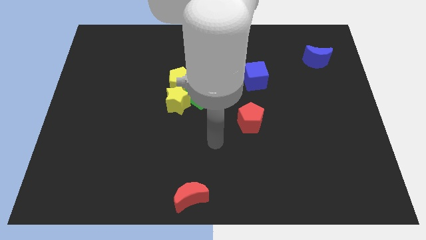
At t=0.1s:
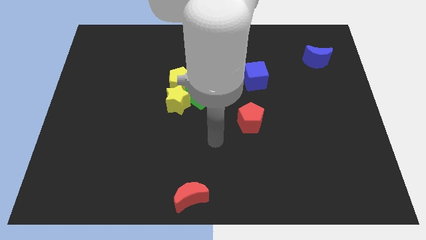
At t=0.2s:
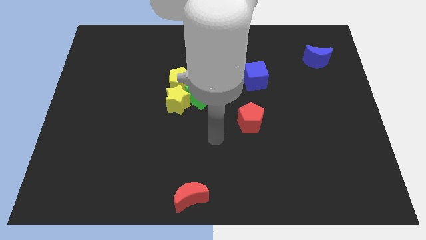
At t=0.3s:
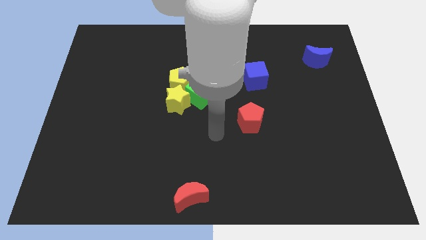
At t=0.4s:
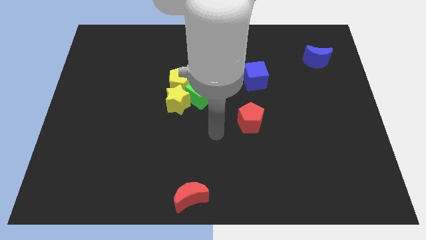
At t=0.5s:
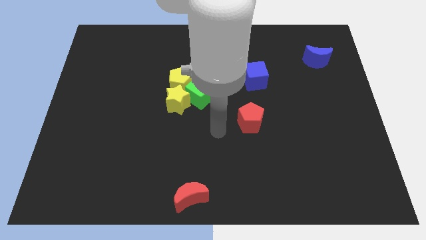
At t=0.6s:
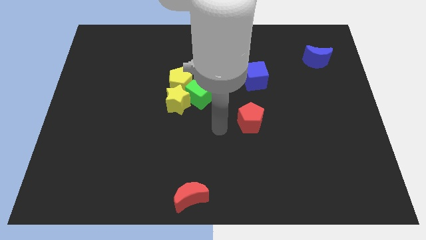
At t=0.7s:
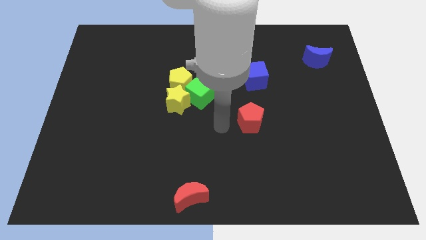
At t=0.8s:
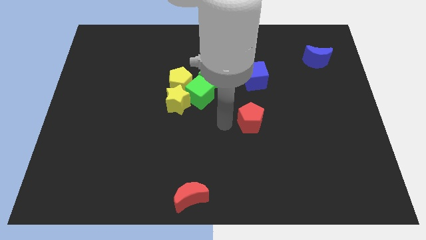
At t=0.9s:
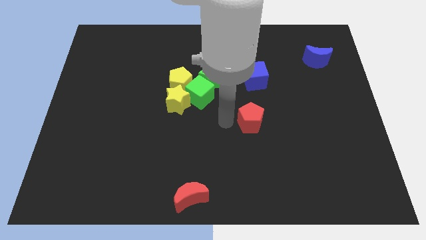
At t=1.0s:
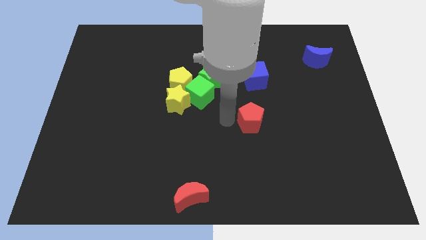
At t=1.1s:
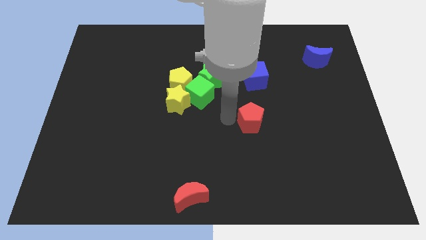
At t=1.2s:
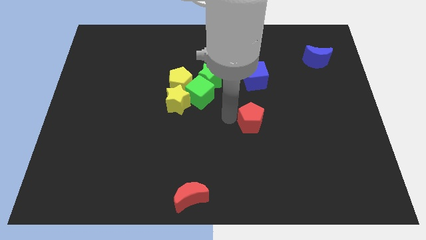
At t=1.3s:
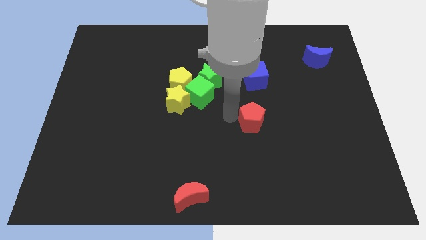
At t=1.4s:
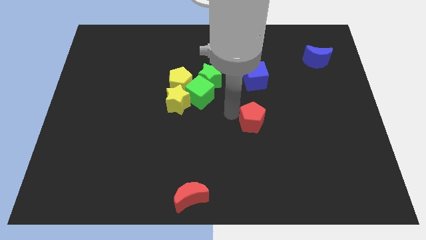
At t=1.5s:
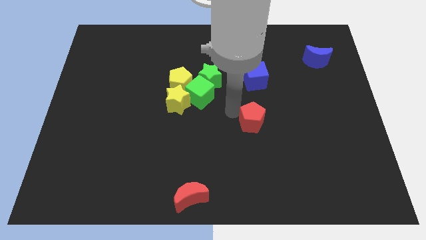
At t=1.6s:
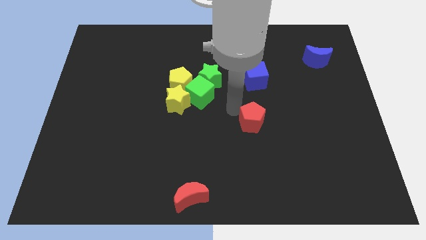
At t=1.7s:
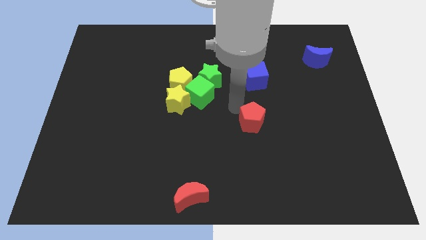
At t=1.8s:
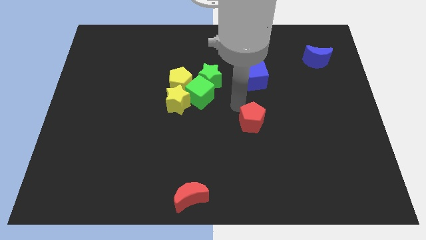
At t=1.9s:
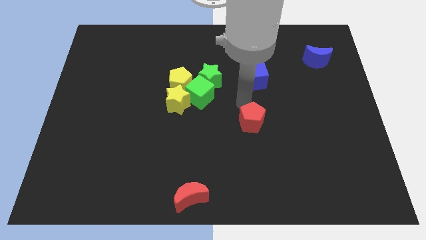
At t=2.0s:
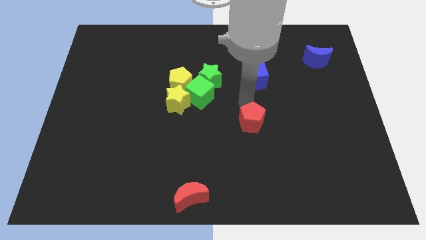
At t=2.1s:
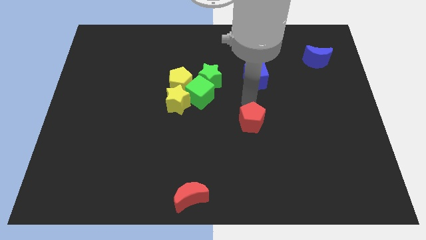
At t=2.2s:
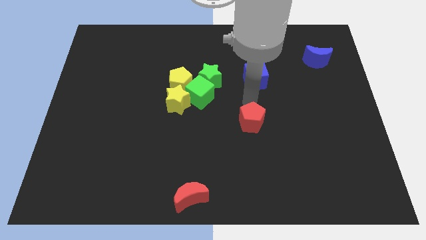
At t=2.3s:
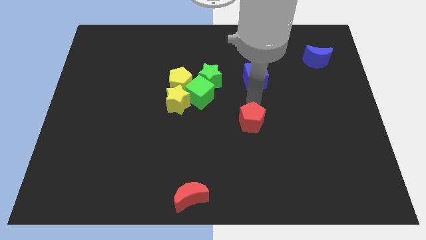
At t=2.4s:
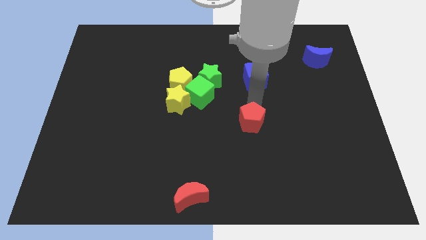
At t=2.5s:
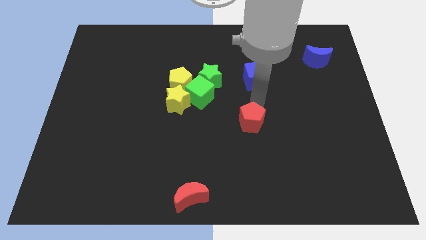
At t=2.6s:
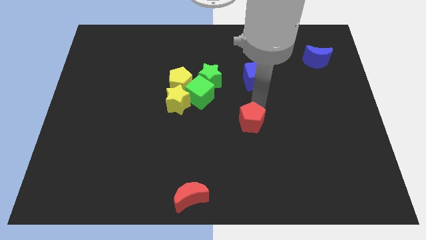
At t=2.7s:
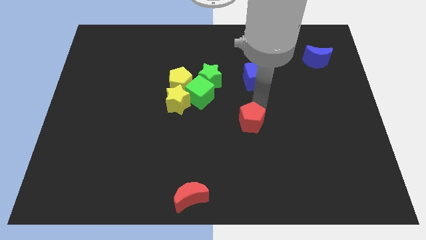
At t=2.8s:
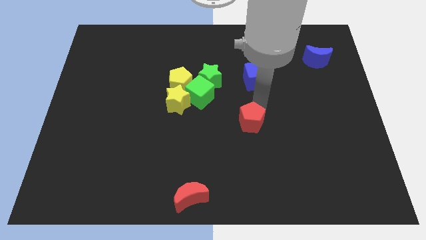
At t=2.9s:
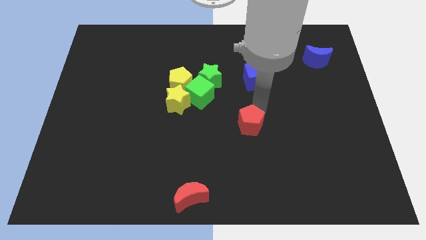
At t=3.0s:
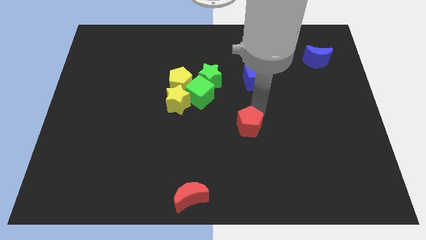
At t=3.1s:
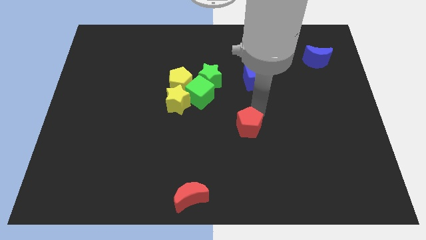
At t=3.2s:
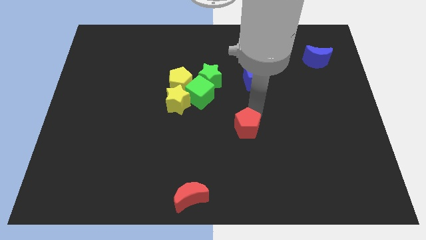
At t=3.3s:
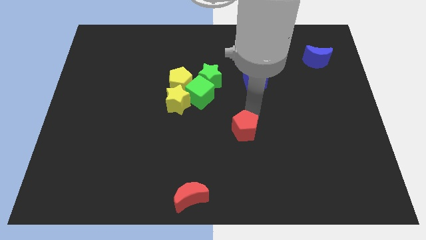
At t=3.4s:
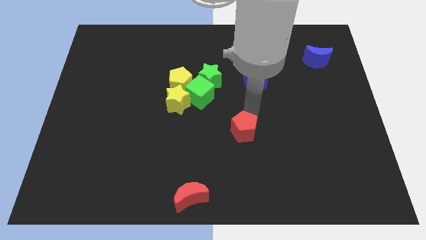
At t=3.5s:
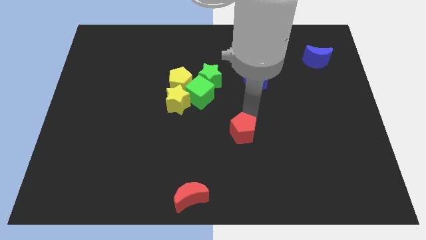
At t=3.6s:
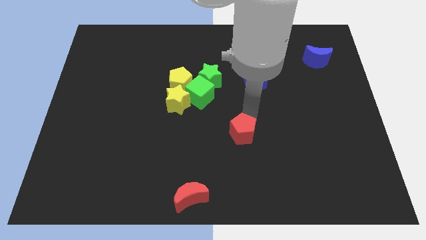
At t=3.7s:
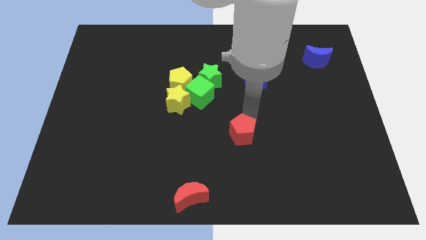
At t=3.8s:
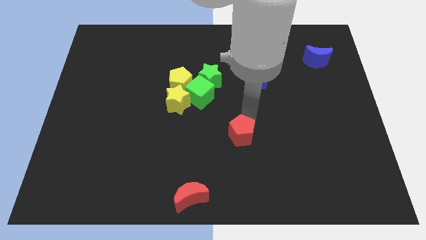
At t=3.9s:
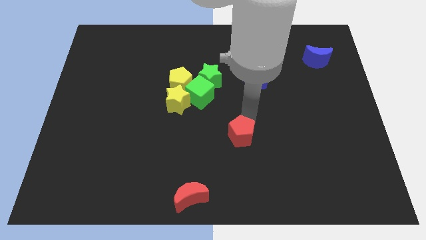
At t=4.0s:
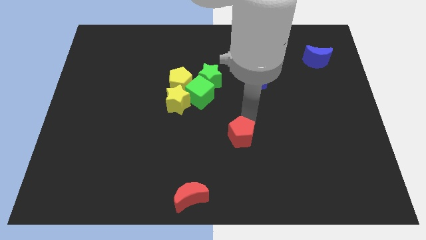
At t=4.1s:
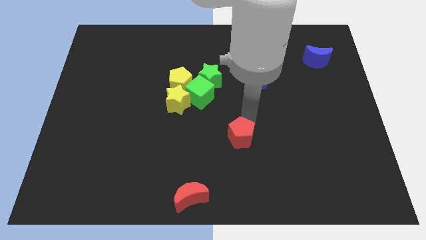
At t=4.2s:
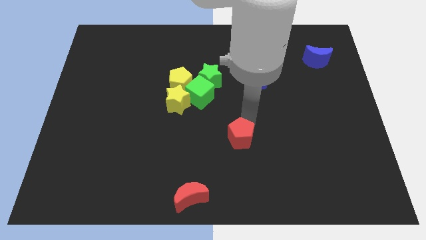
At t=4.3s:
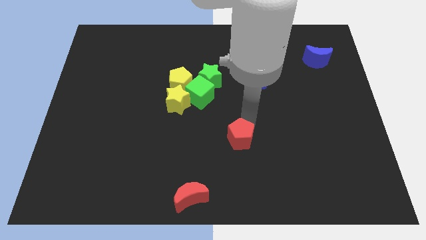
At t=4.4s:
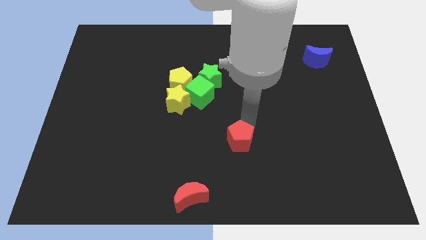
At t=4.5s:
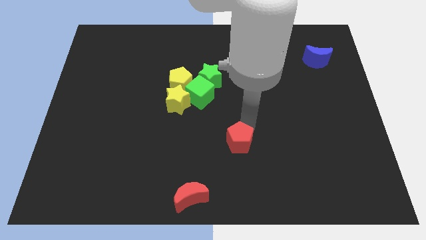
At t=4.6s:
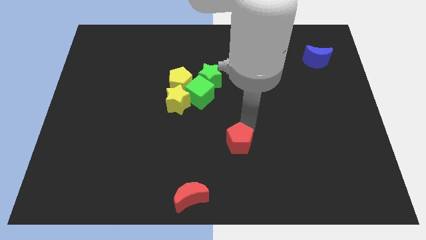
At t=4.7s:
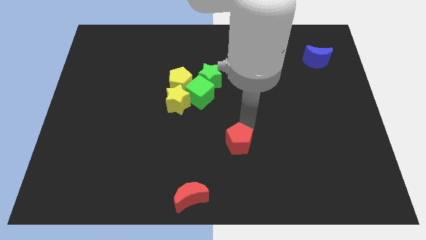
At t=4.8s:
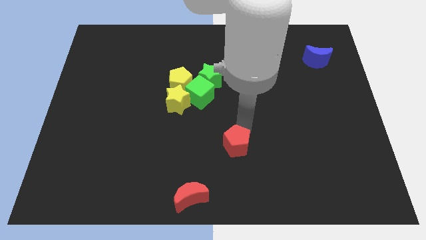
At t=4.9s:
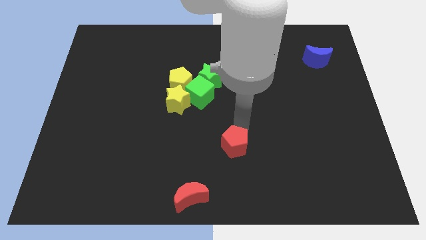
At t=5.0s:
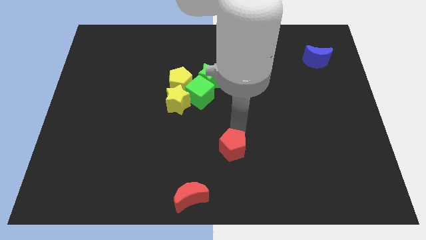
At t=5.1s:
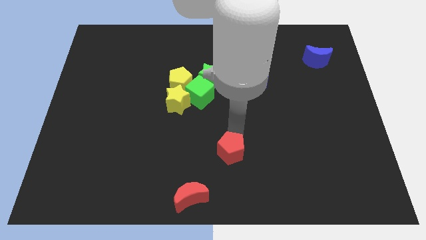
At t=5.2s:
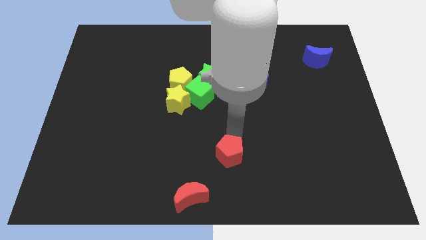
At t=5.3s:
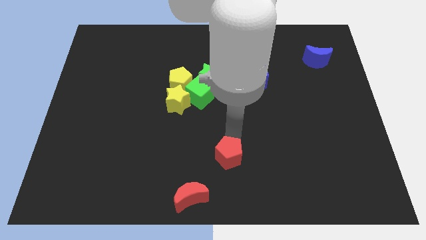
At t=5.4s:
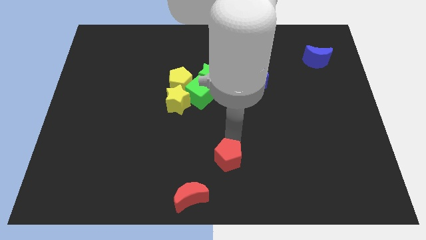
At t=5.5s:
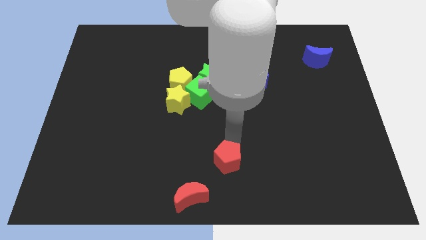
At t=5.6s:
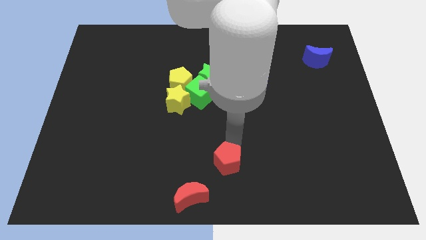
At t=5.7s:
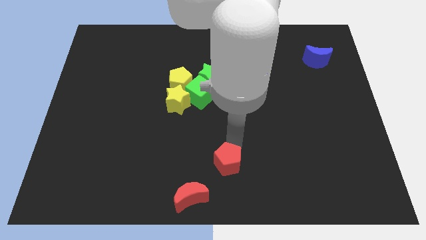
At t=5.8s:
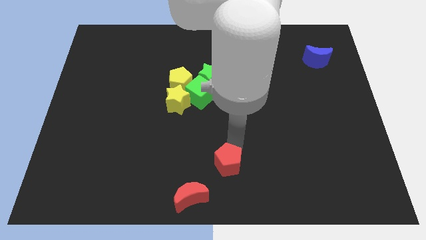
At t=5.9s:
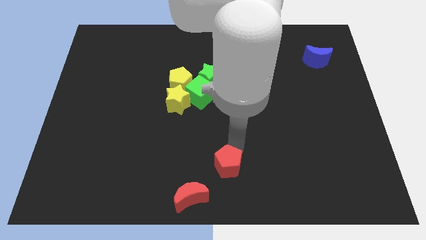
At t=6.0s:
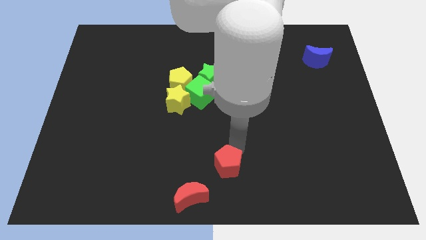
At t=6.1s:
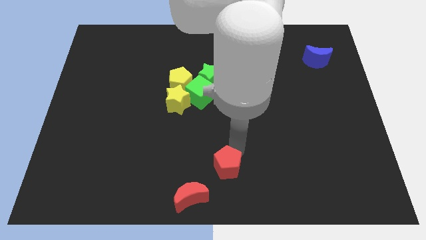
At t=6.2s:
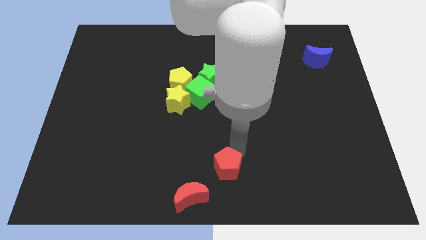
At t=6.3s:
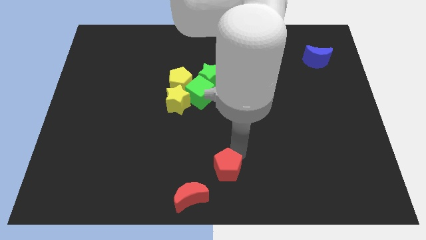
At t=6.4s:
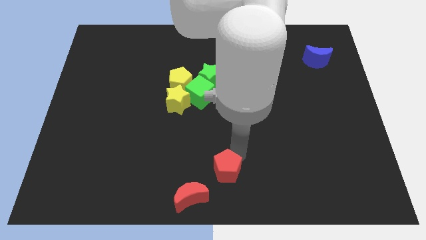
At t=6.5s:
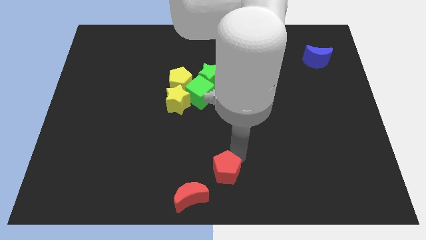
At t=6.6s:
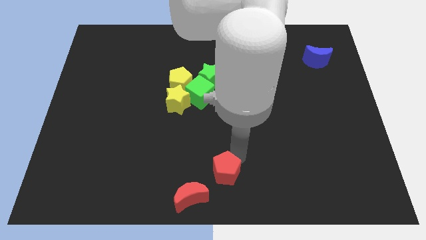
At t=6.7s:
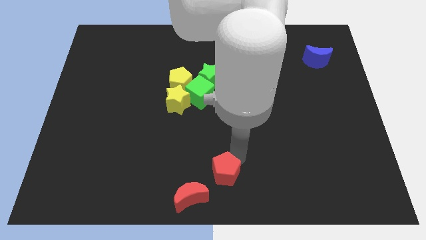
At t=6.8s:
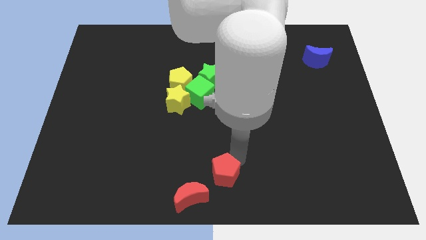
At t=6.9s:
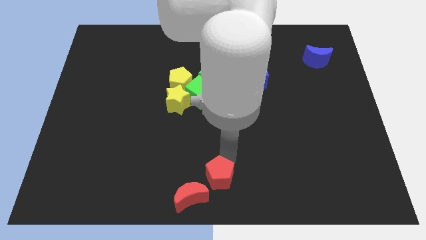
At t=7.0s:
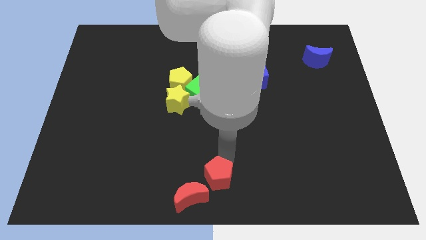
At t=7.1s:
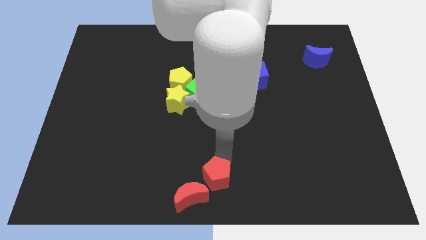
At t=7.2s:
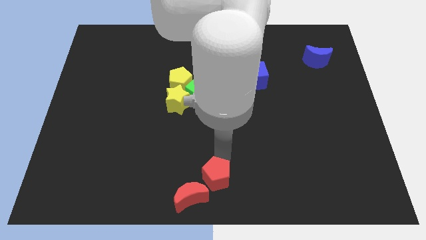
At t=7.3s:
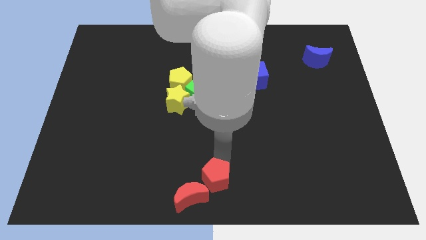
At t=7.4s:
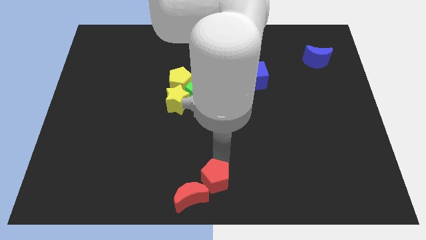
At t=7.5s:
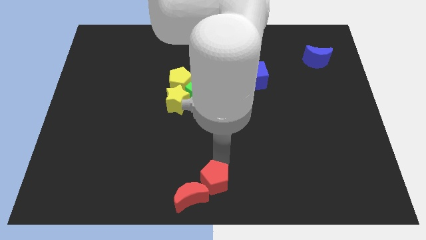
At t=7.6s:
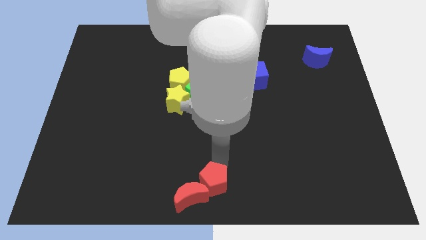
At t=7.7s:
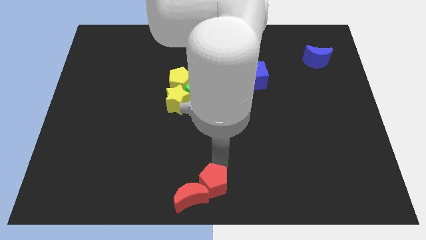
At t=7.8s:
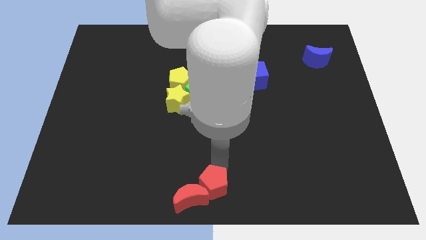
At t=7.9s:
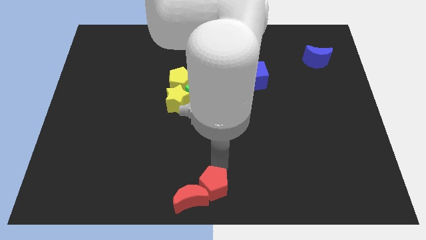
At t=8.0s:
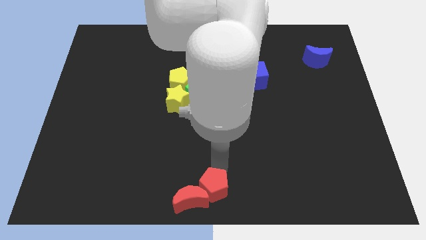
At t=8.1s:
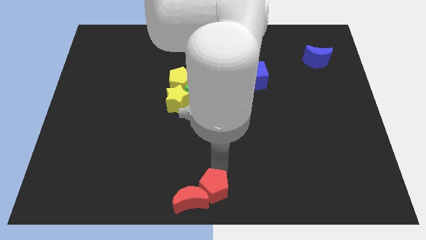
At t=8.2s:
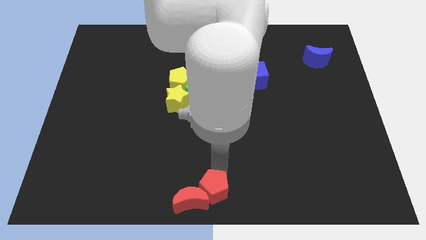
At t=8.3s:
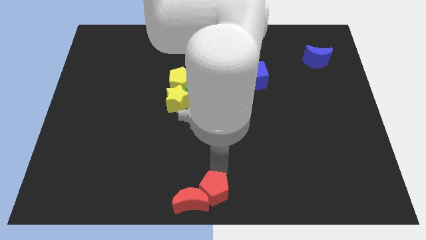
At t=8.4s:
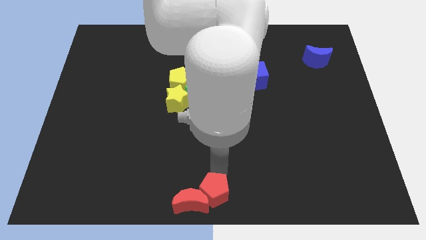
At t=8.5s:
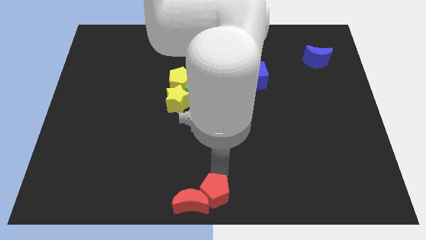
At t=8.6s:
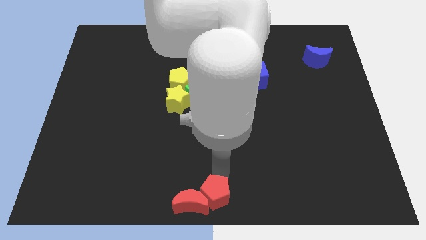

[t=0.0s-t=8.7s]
move the red pentagon to the right of the red crescent

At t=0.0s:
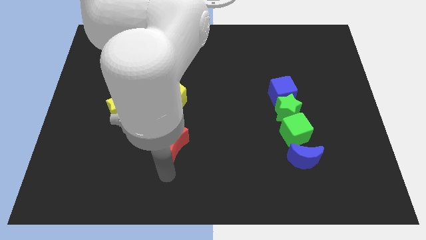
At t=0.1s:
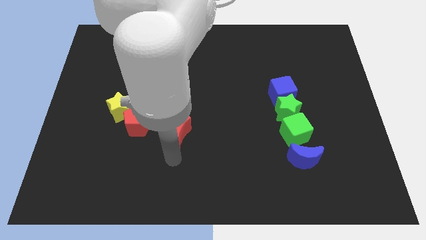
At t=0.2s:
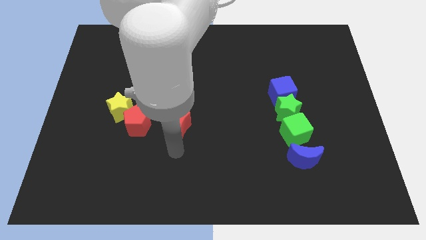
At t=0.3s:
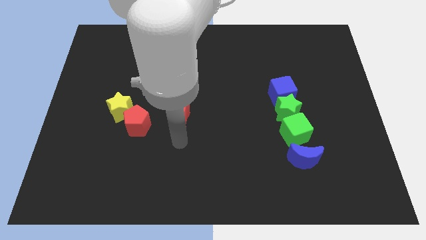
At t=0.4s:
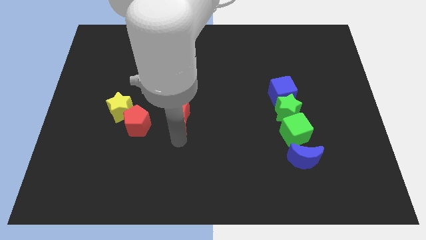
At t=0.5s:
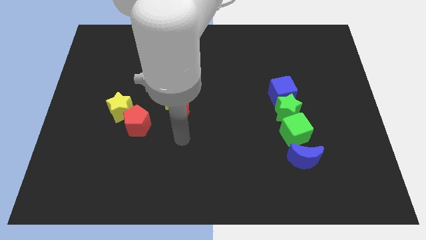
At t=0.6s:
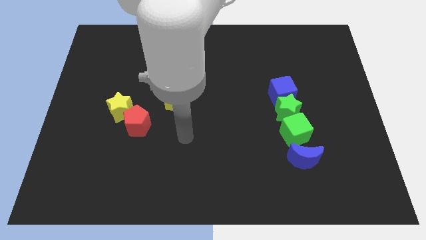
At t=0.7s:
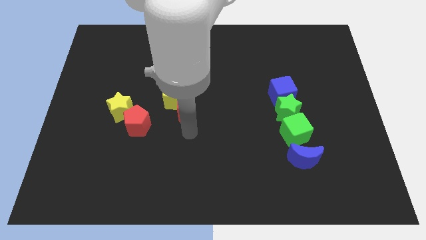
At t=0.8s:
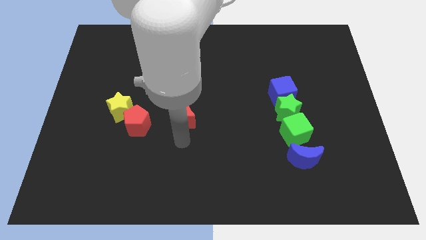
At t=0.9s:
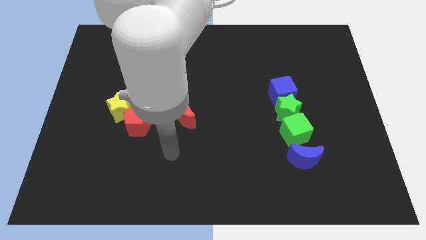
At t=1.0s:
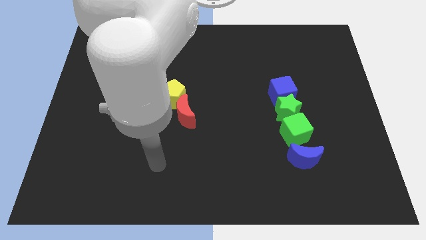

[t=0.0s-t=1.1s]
push red moon into yellow pentagon
